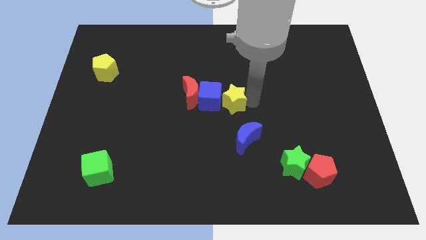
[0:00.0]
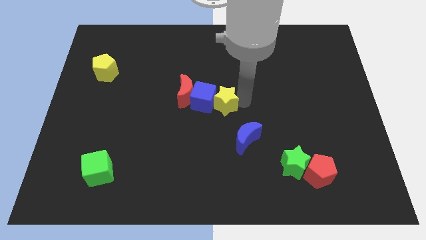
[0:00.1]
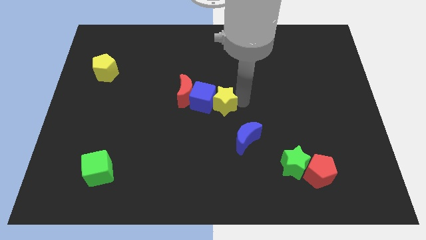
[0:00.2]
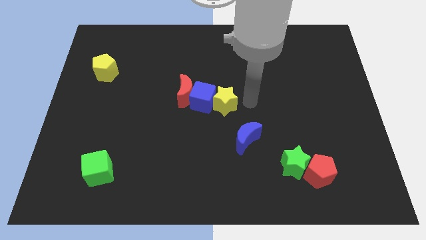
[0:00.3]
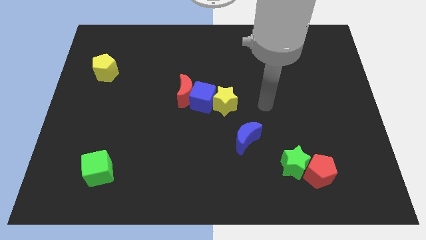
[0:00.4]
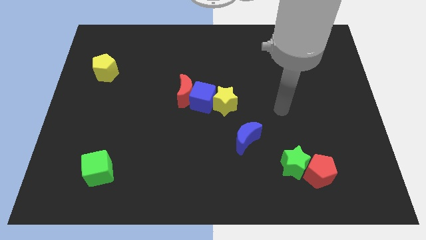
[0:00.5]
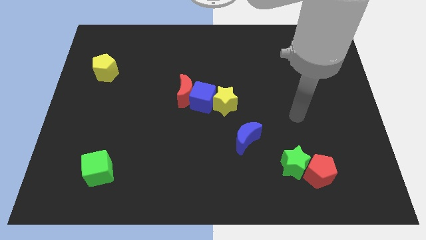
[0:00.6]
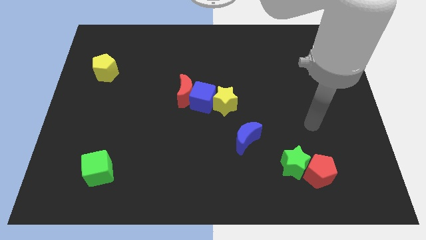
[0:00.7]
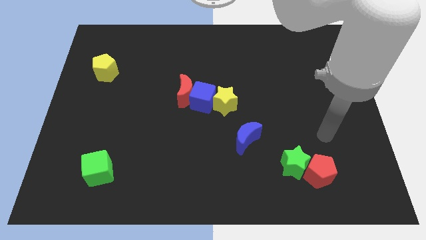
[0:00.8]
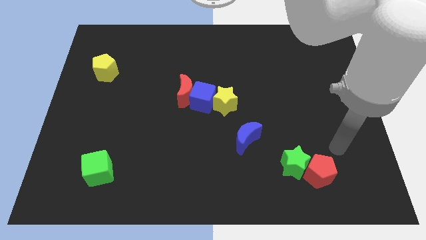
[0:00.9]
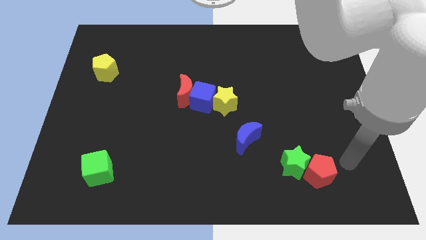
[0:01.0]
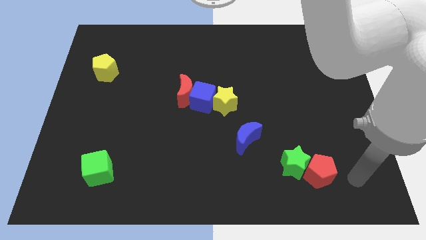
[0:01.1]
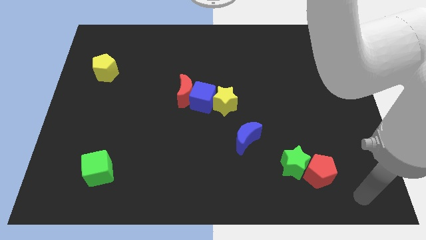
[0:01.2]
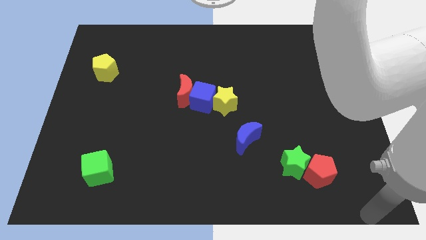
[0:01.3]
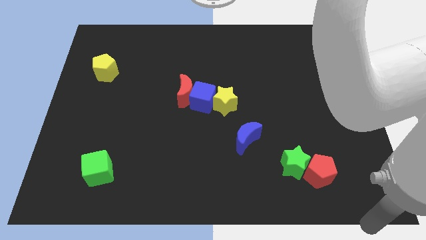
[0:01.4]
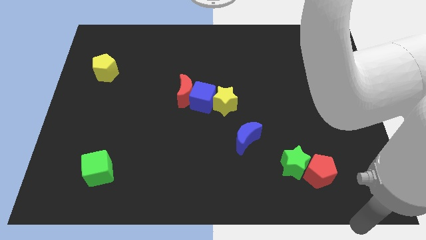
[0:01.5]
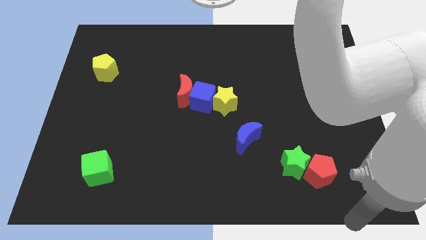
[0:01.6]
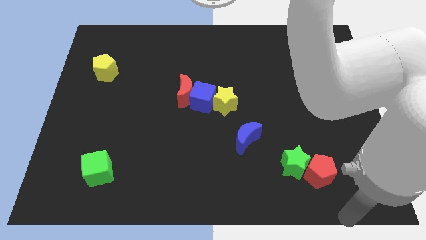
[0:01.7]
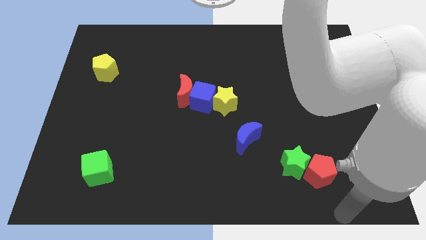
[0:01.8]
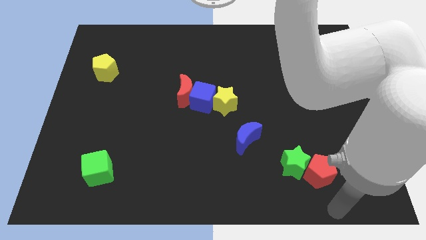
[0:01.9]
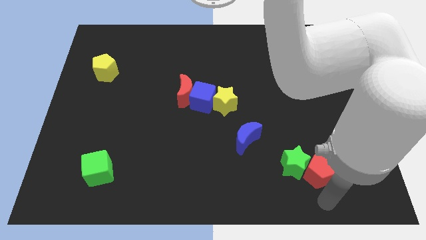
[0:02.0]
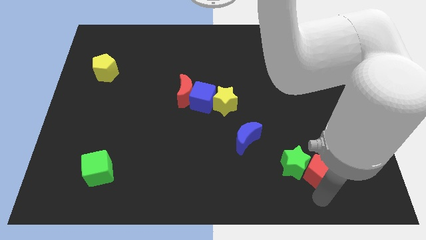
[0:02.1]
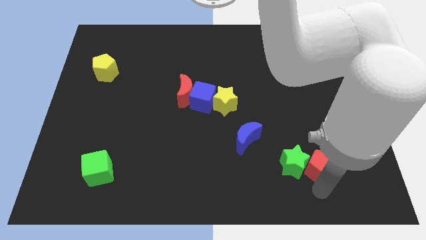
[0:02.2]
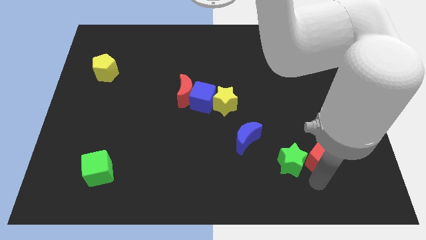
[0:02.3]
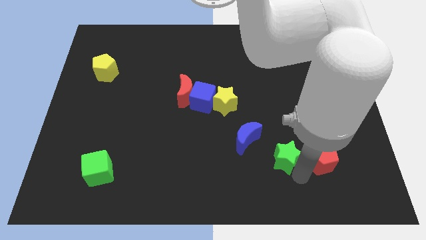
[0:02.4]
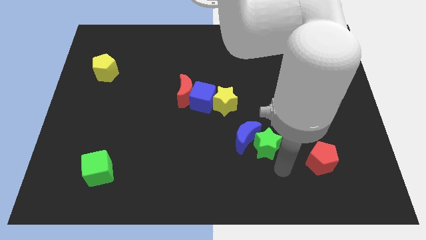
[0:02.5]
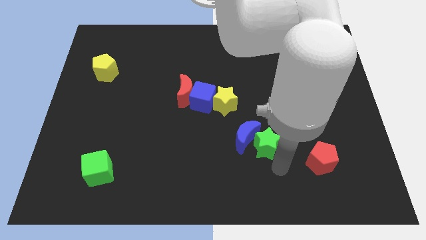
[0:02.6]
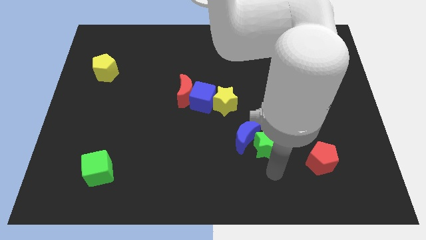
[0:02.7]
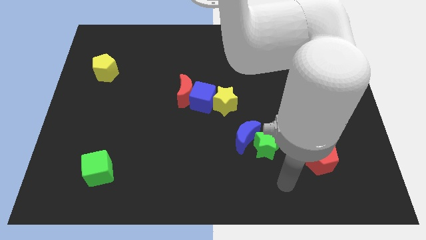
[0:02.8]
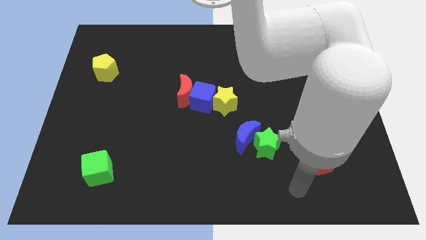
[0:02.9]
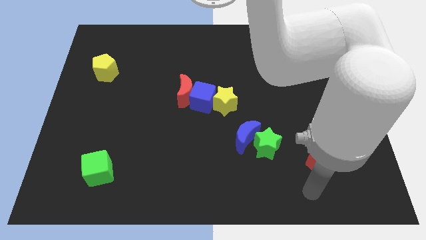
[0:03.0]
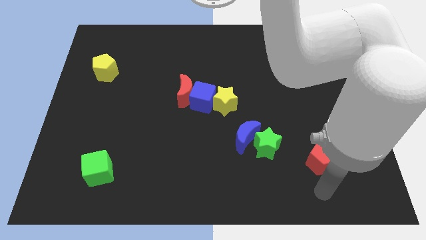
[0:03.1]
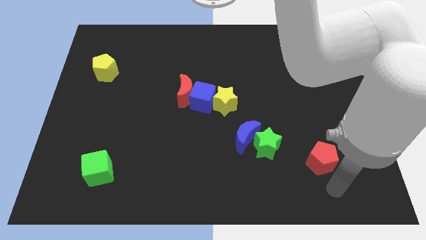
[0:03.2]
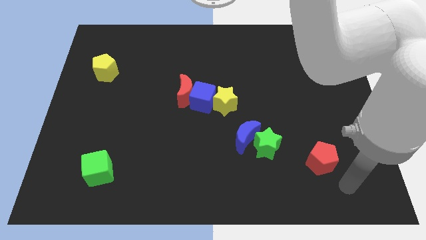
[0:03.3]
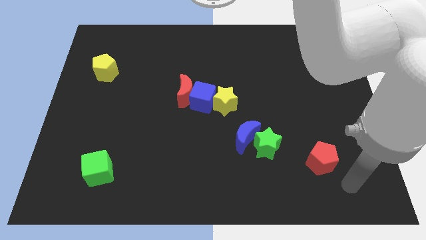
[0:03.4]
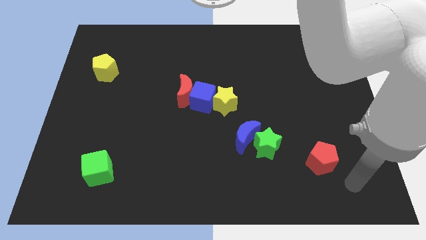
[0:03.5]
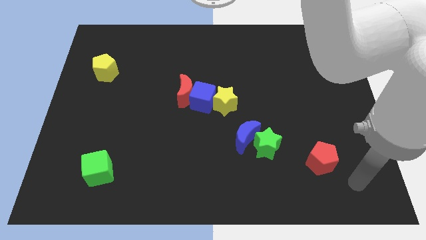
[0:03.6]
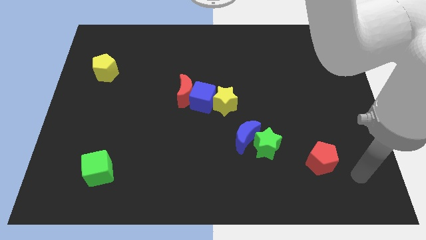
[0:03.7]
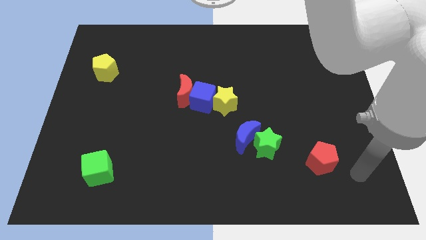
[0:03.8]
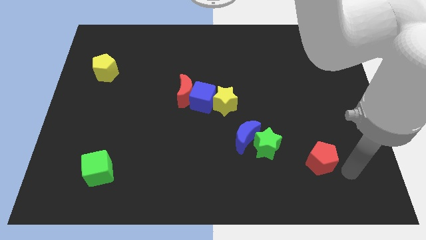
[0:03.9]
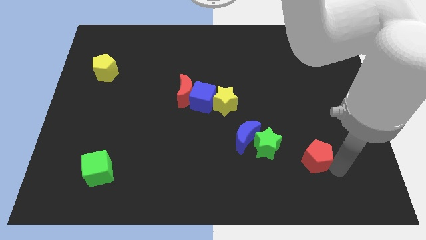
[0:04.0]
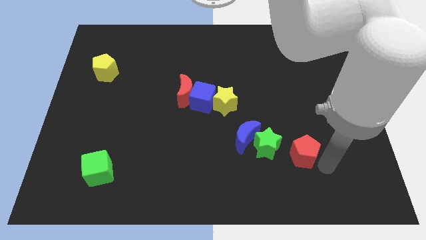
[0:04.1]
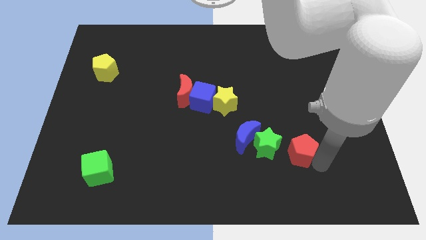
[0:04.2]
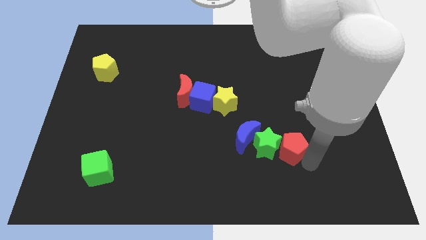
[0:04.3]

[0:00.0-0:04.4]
place the red pentagon to the right side of the green star

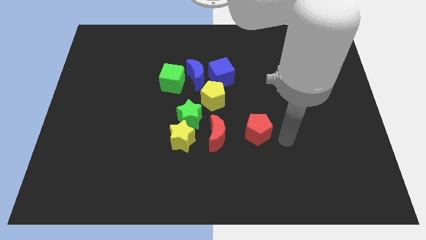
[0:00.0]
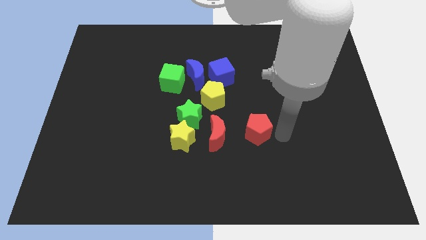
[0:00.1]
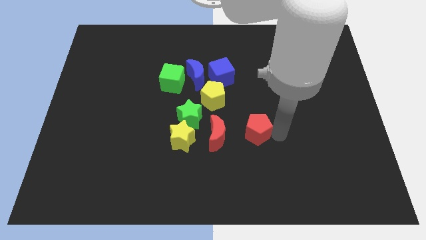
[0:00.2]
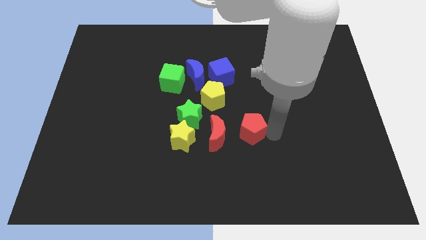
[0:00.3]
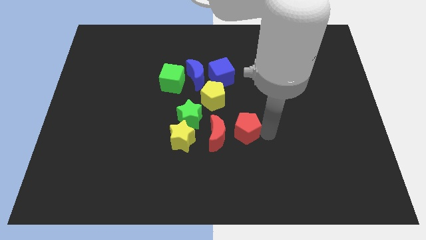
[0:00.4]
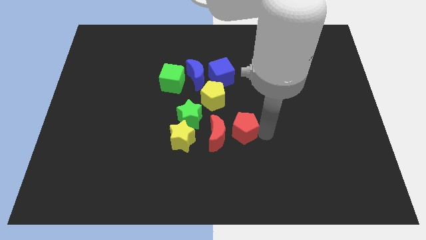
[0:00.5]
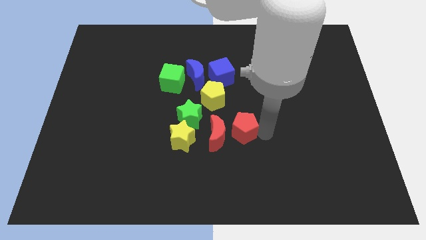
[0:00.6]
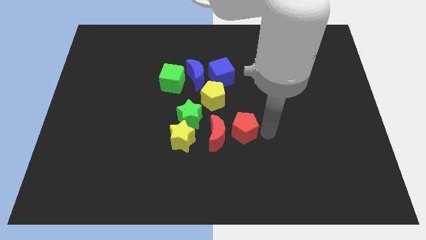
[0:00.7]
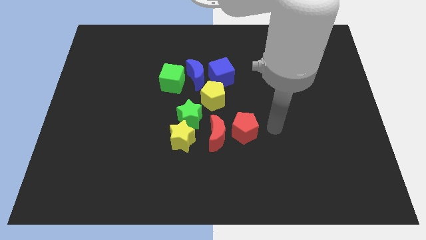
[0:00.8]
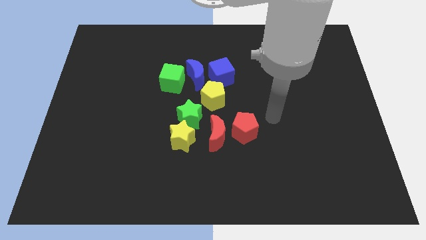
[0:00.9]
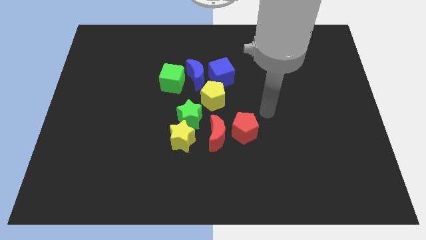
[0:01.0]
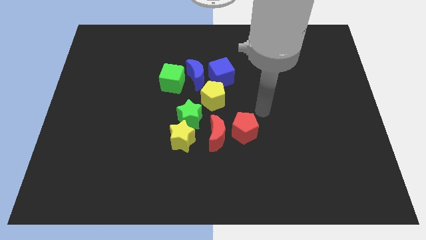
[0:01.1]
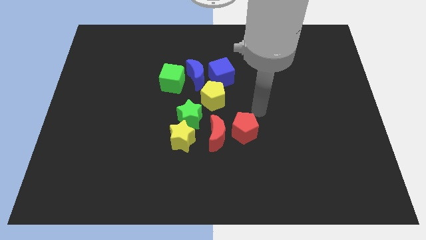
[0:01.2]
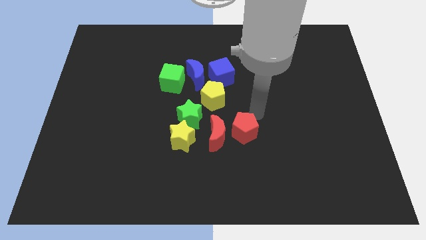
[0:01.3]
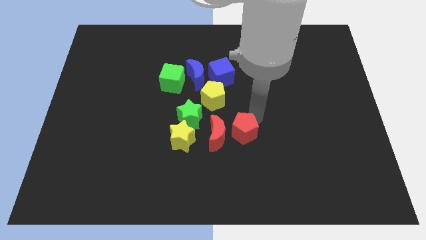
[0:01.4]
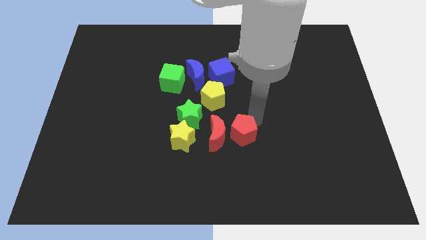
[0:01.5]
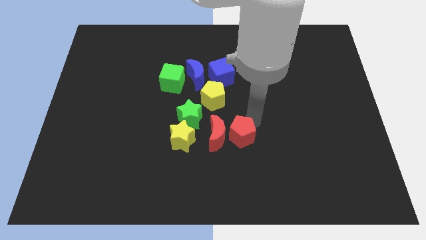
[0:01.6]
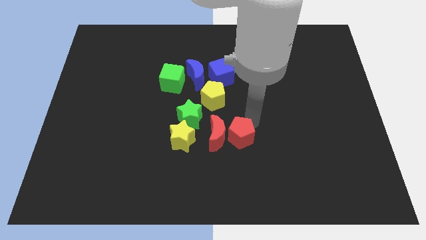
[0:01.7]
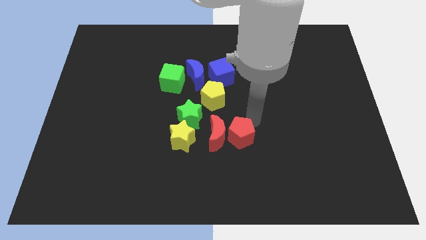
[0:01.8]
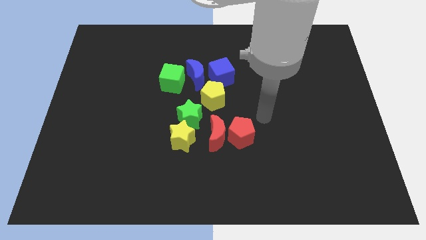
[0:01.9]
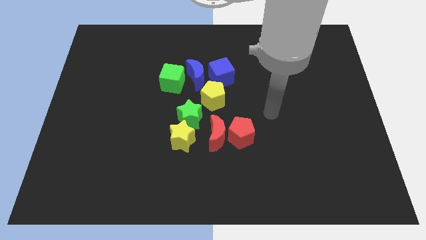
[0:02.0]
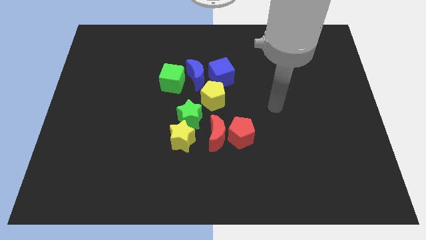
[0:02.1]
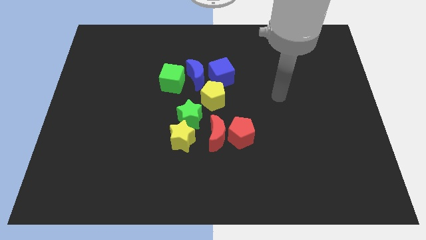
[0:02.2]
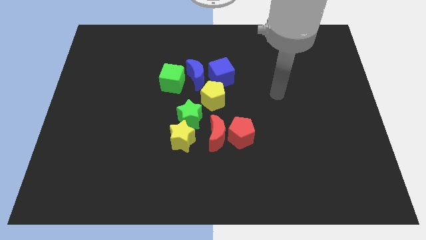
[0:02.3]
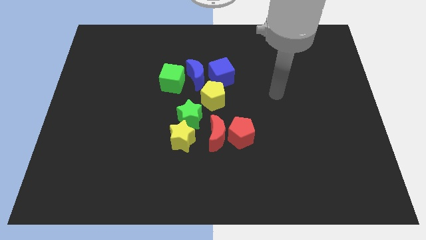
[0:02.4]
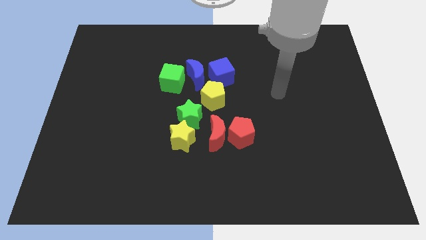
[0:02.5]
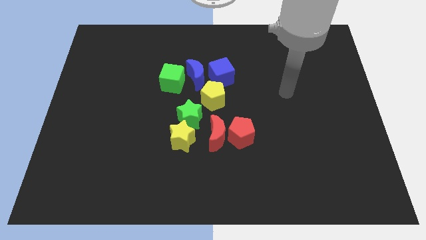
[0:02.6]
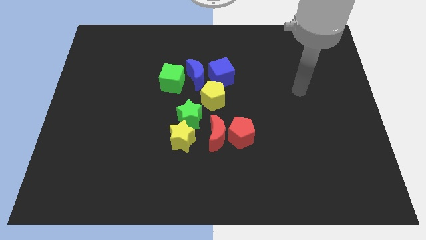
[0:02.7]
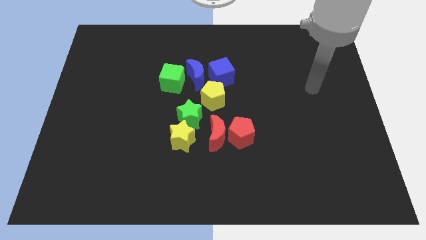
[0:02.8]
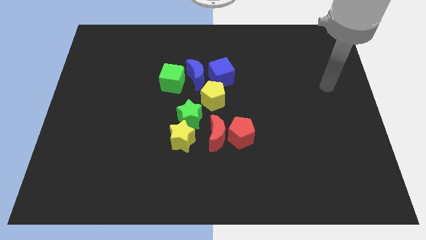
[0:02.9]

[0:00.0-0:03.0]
push the red pentagon towards the red crescent

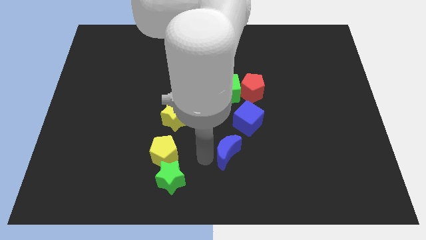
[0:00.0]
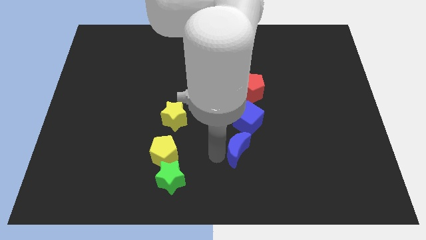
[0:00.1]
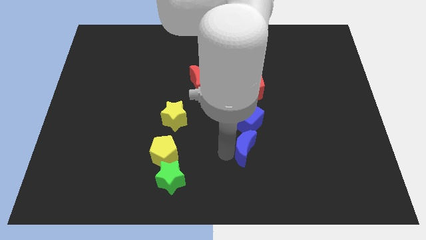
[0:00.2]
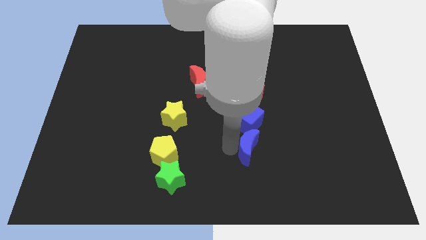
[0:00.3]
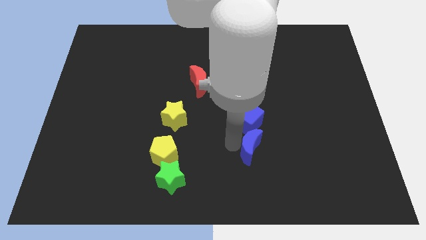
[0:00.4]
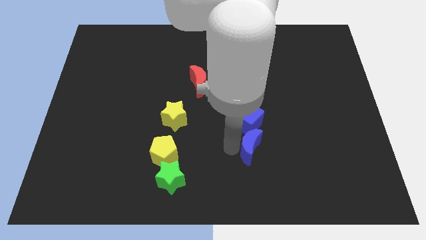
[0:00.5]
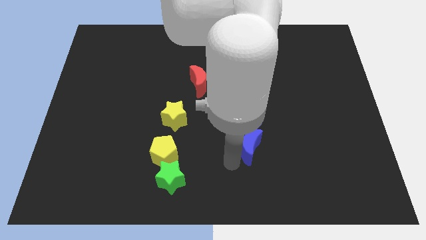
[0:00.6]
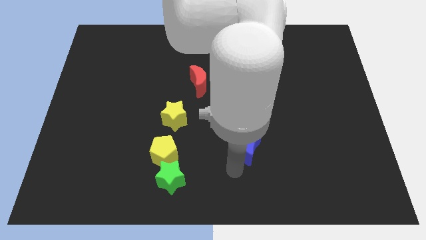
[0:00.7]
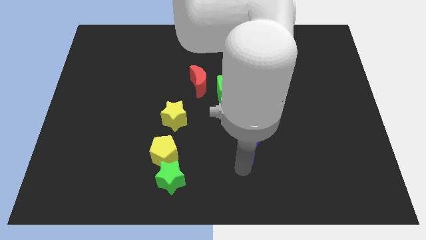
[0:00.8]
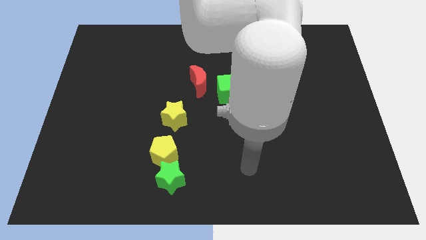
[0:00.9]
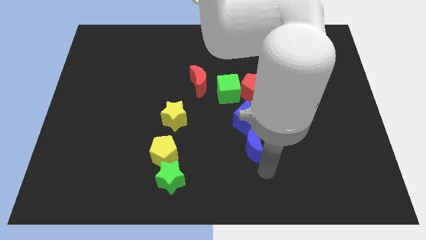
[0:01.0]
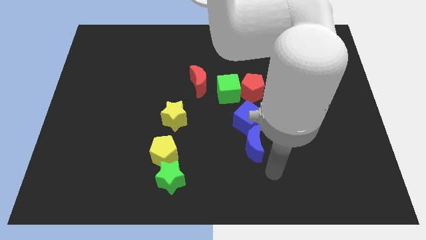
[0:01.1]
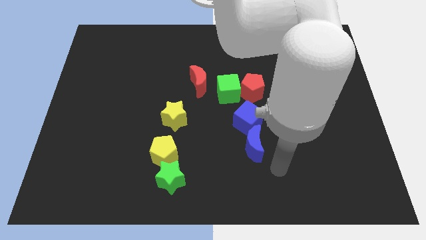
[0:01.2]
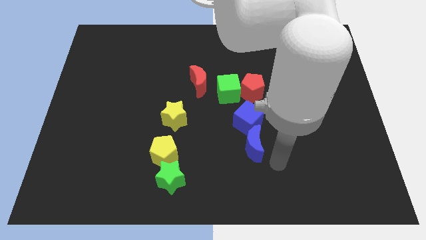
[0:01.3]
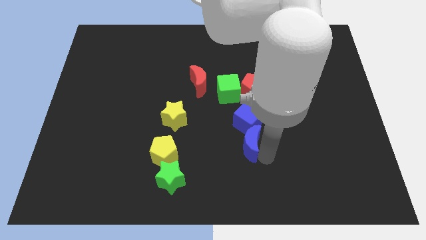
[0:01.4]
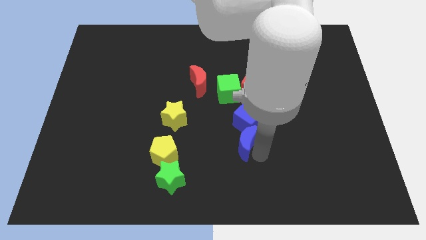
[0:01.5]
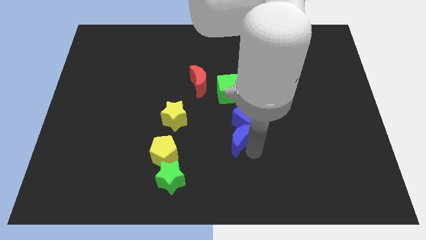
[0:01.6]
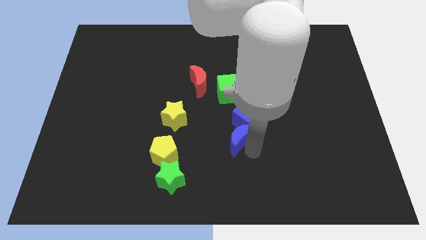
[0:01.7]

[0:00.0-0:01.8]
move the blue moon near to the blue cube
